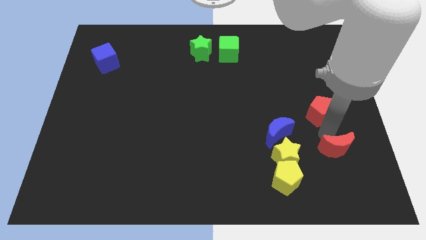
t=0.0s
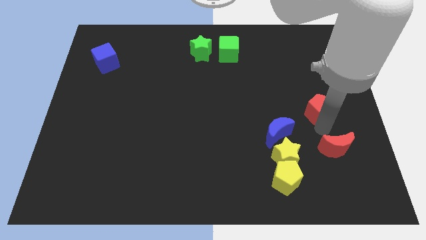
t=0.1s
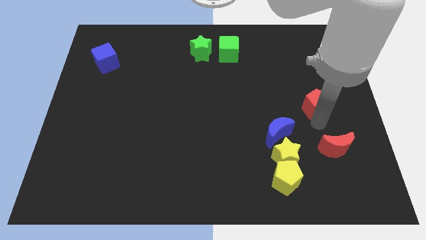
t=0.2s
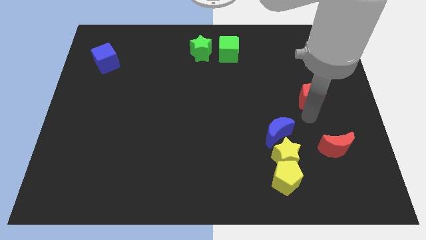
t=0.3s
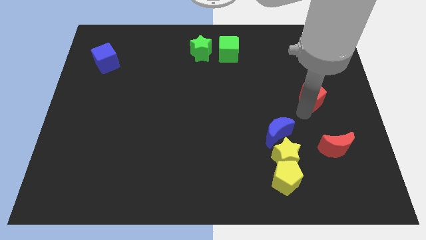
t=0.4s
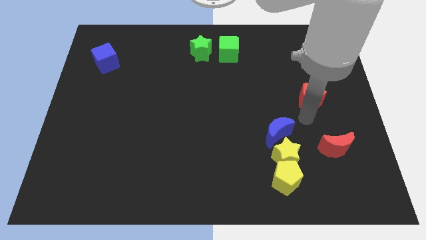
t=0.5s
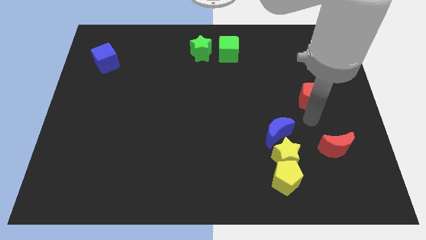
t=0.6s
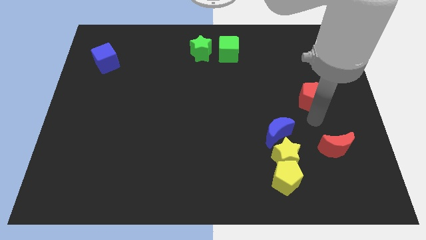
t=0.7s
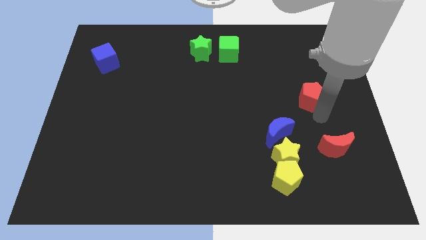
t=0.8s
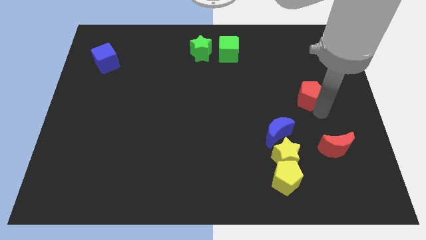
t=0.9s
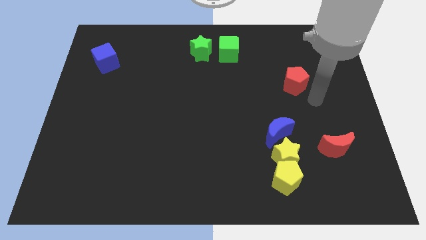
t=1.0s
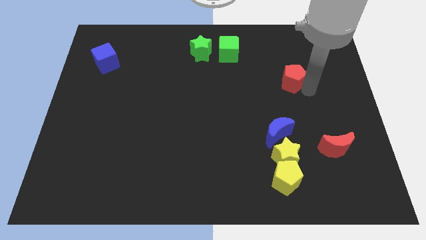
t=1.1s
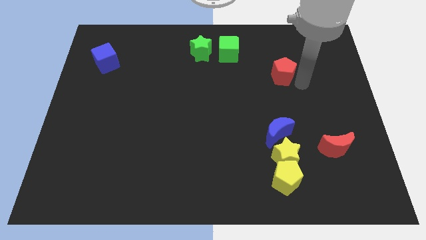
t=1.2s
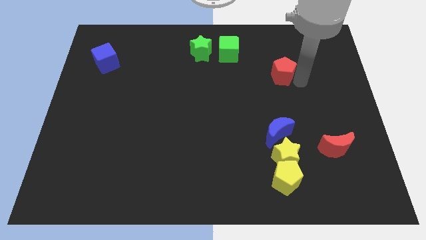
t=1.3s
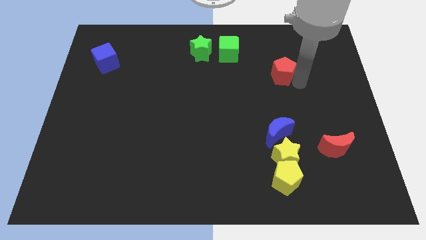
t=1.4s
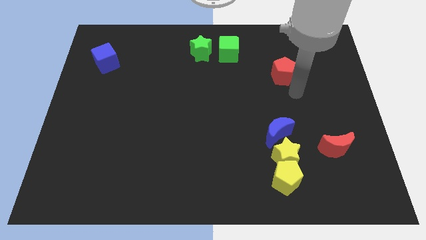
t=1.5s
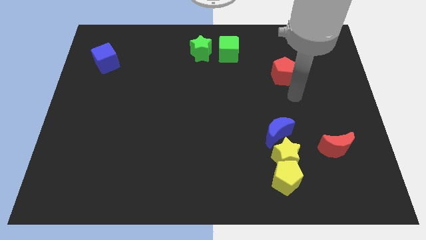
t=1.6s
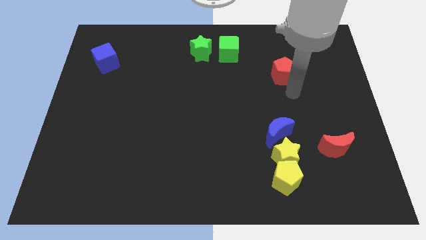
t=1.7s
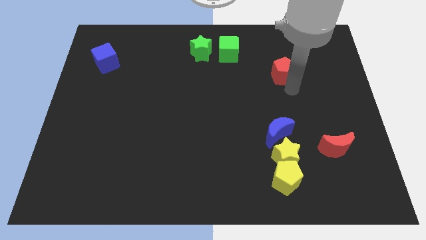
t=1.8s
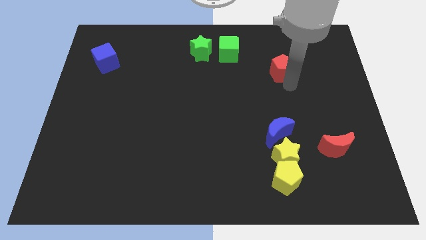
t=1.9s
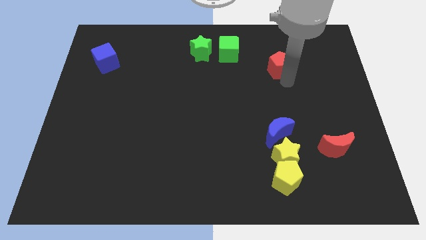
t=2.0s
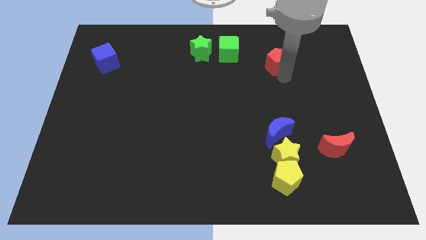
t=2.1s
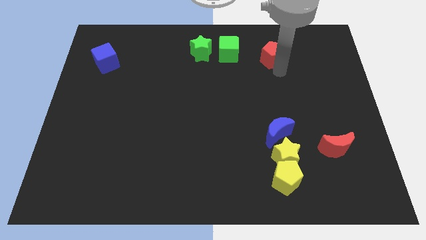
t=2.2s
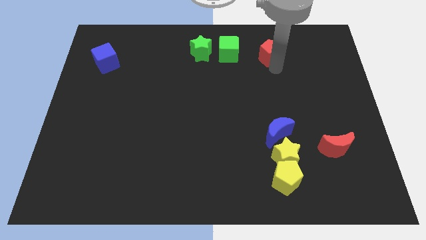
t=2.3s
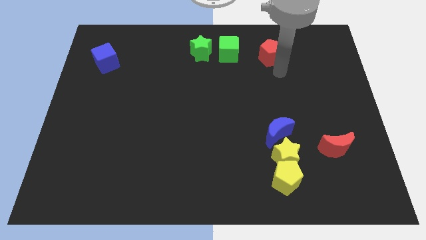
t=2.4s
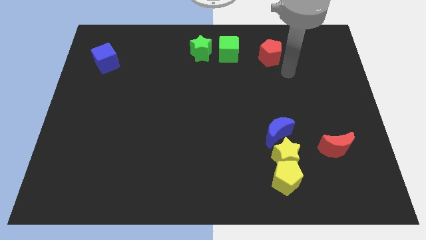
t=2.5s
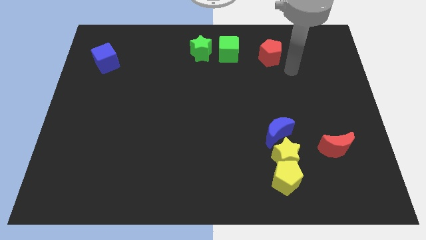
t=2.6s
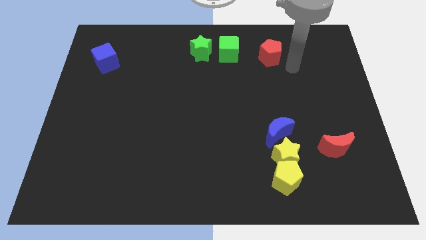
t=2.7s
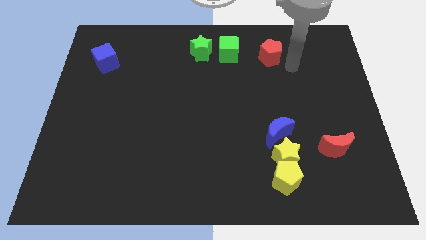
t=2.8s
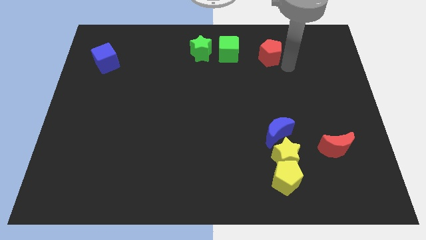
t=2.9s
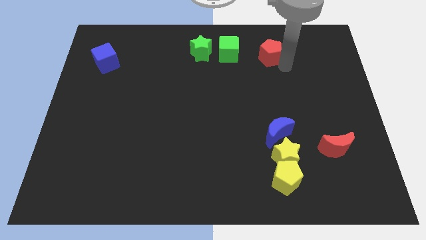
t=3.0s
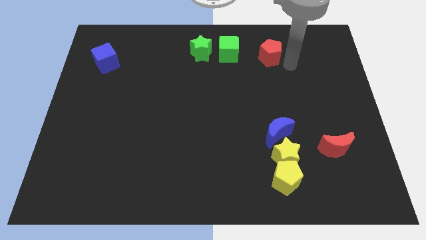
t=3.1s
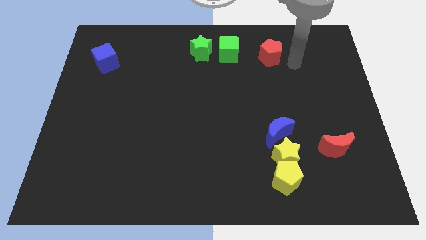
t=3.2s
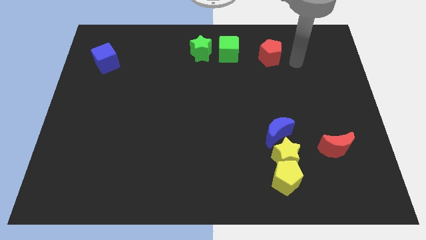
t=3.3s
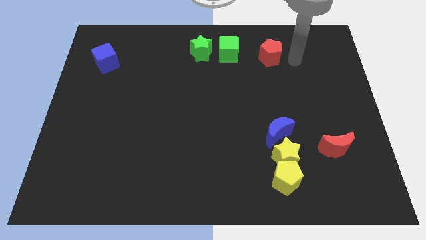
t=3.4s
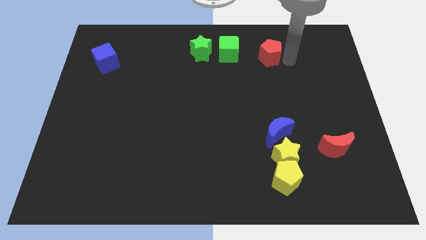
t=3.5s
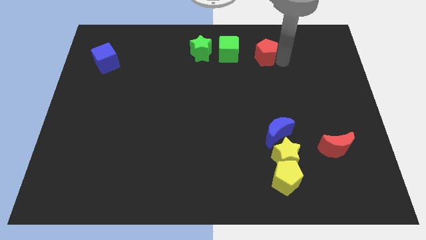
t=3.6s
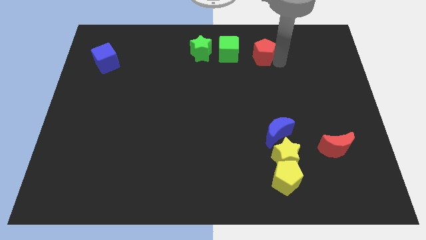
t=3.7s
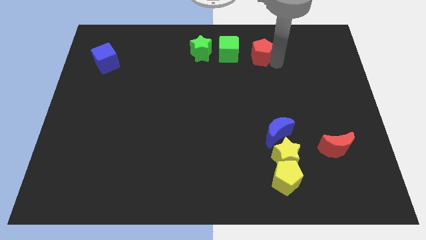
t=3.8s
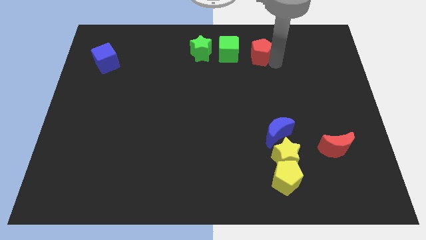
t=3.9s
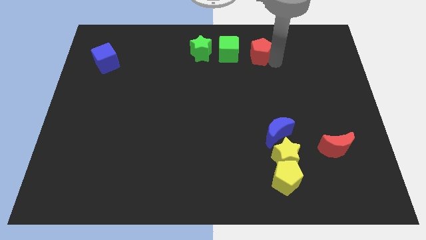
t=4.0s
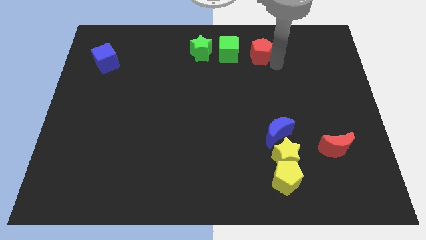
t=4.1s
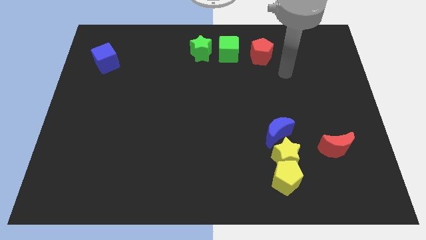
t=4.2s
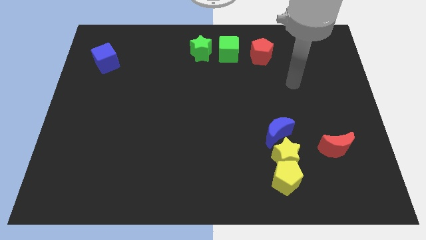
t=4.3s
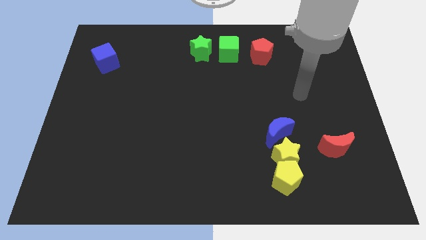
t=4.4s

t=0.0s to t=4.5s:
move the red pentagon to the right side of the green cube

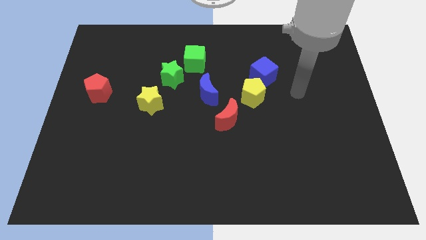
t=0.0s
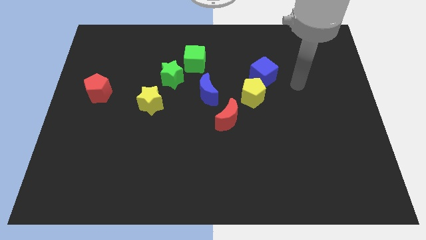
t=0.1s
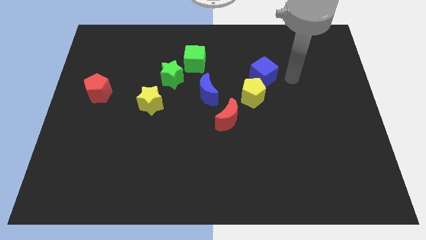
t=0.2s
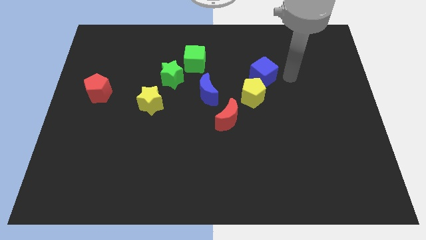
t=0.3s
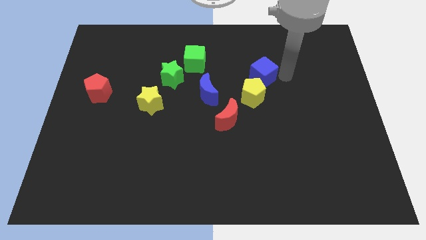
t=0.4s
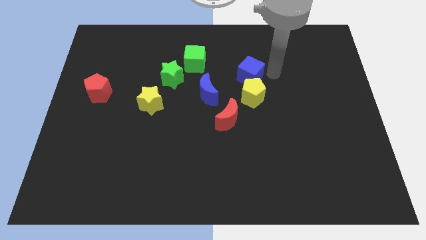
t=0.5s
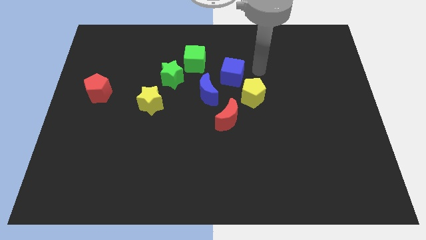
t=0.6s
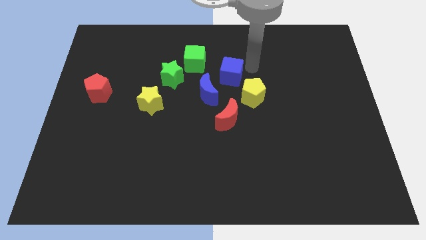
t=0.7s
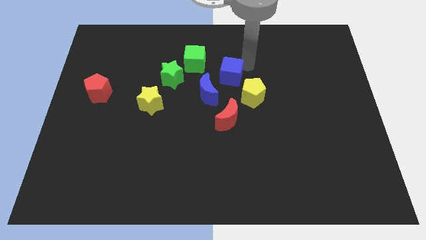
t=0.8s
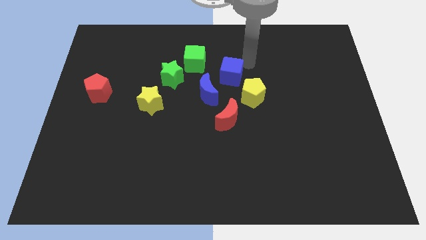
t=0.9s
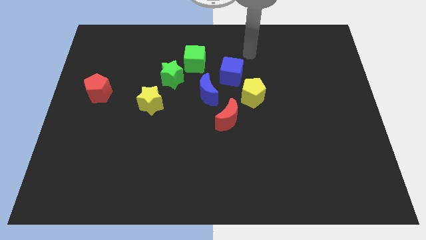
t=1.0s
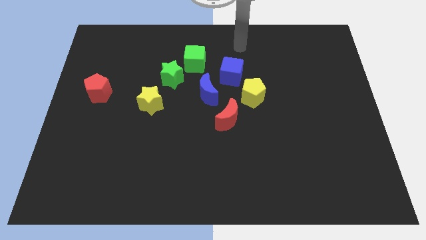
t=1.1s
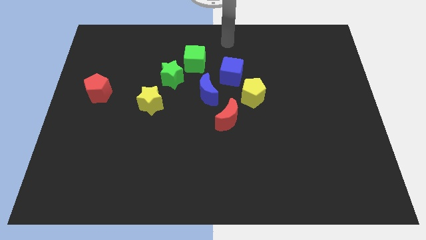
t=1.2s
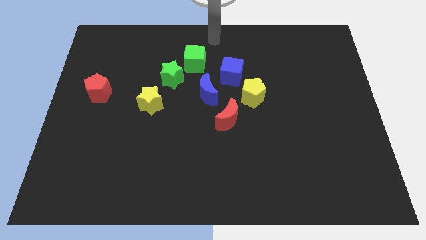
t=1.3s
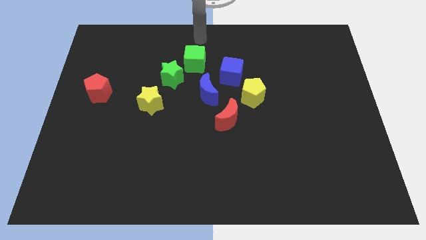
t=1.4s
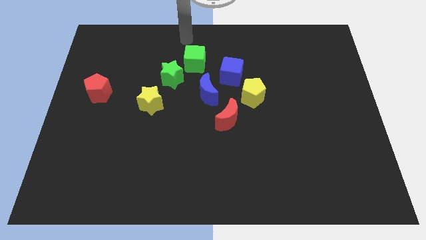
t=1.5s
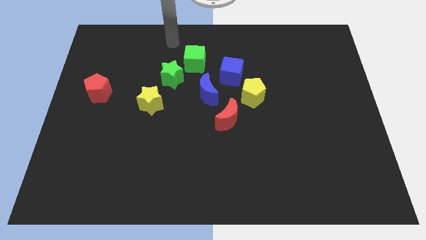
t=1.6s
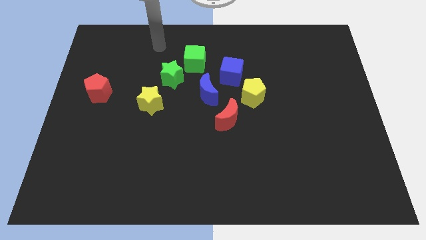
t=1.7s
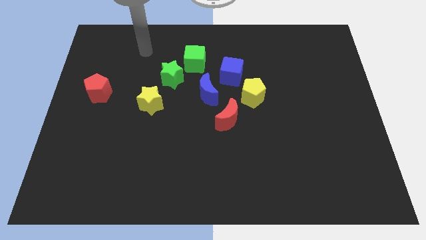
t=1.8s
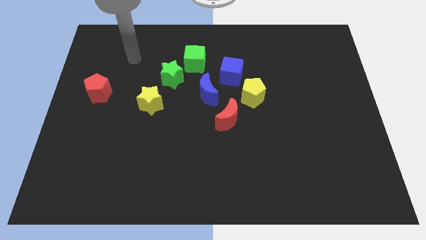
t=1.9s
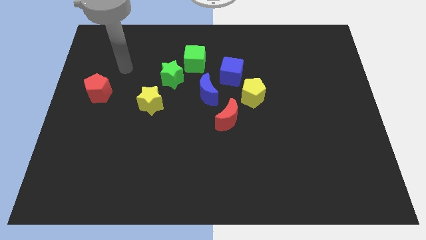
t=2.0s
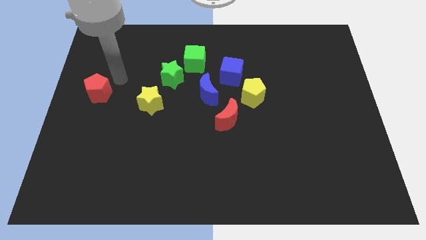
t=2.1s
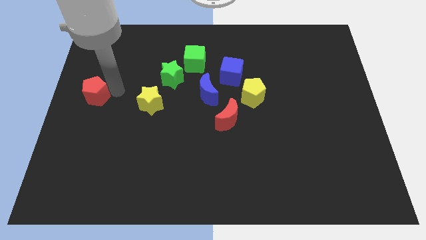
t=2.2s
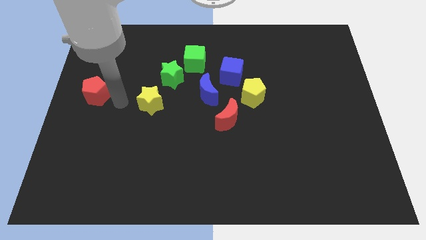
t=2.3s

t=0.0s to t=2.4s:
move the blue cube to the left

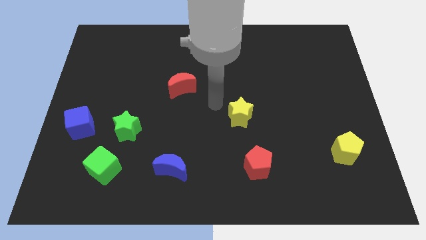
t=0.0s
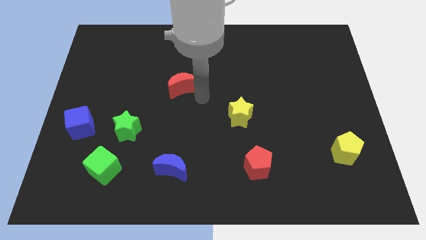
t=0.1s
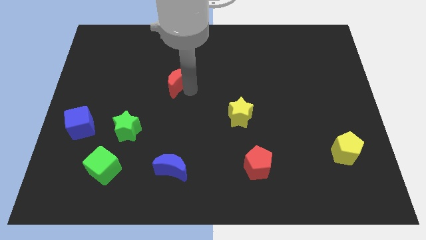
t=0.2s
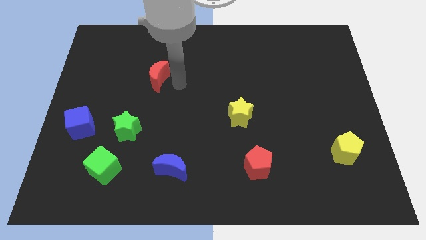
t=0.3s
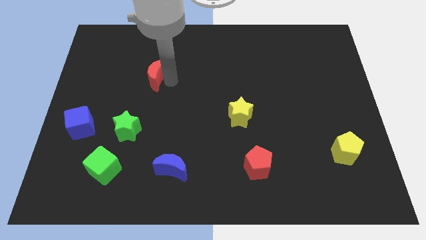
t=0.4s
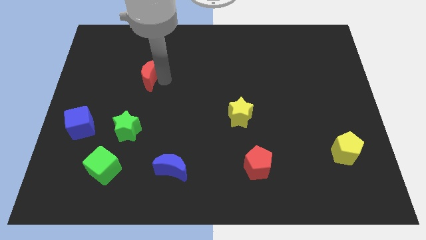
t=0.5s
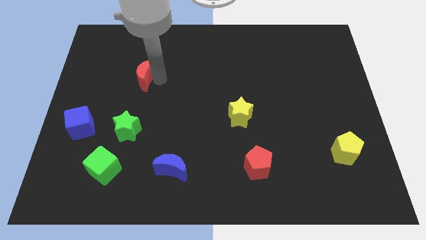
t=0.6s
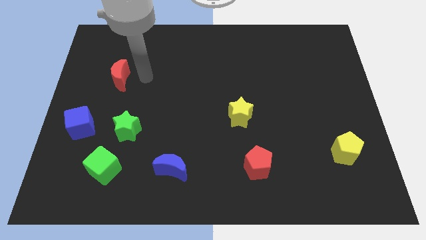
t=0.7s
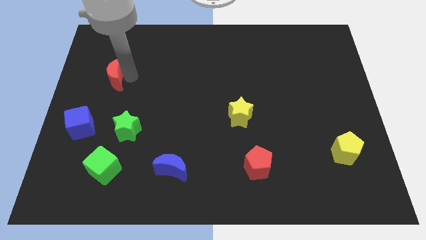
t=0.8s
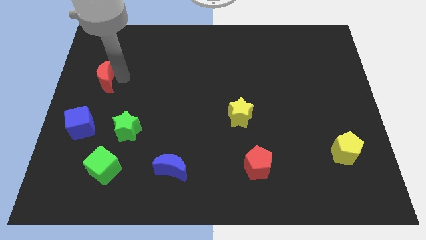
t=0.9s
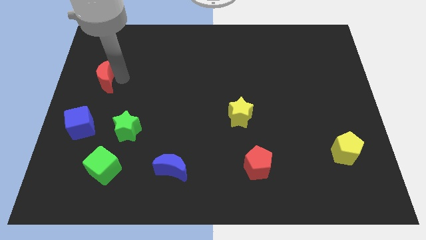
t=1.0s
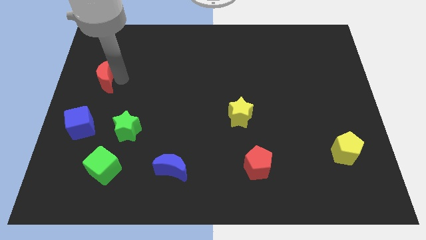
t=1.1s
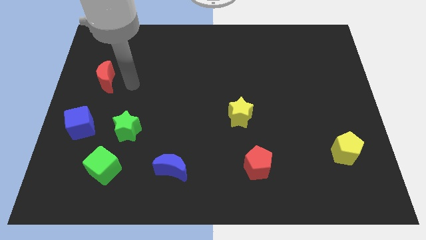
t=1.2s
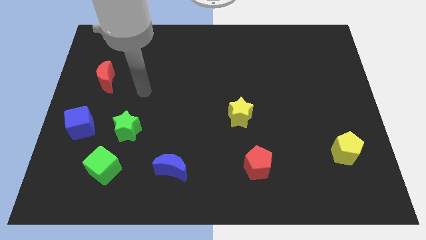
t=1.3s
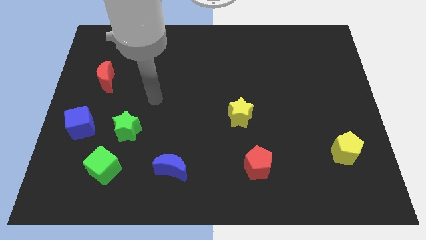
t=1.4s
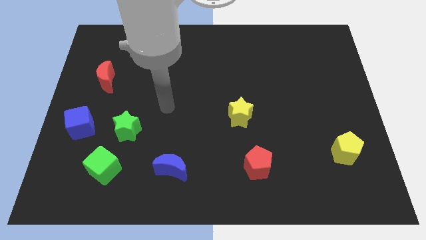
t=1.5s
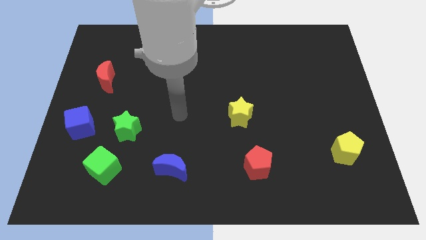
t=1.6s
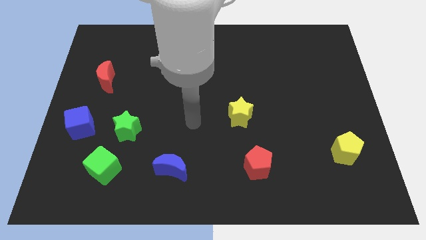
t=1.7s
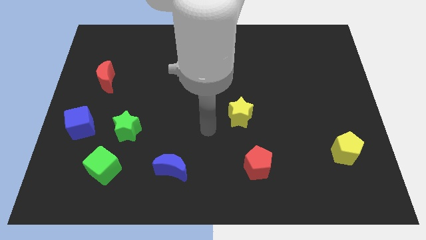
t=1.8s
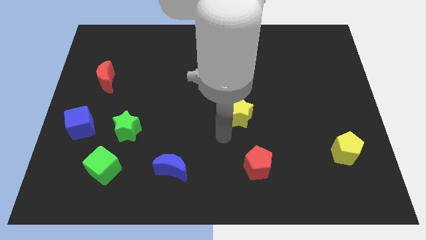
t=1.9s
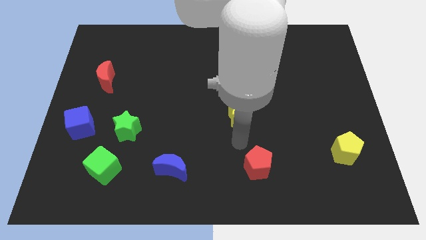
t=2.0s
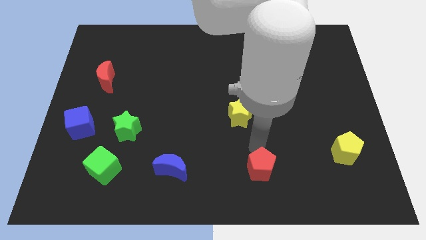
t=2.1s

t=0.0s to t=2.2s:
move the red crescent to the left of the board
